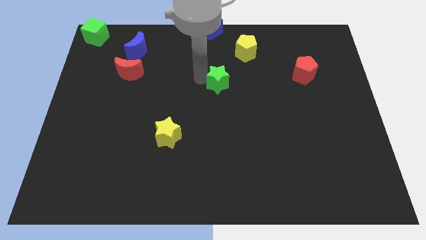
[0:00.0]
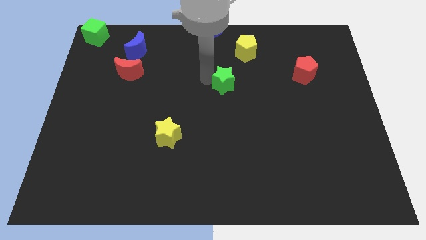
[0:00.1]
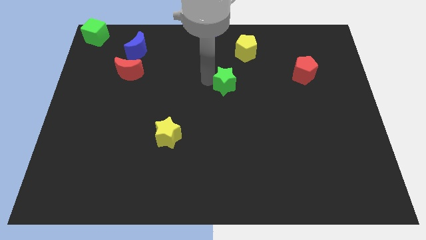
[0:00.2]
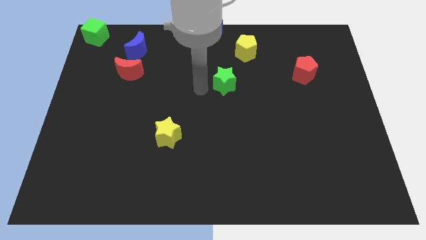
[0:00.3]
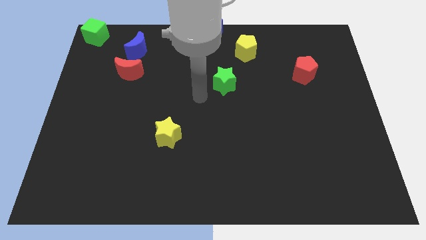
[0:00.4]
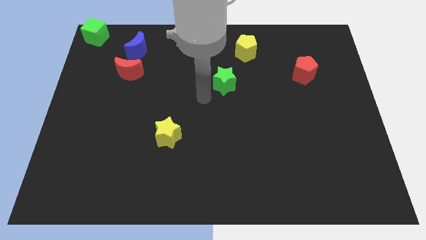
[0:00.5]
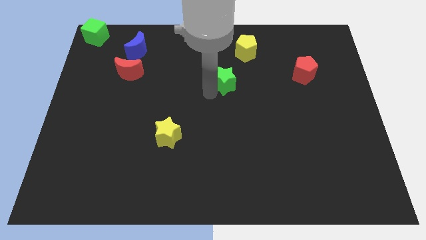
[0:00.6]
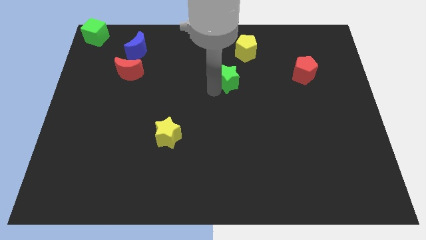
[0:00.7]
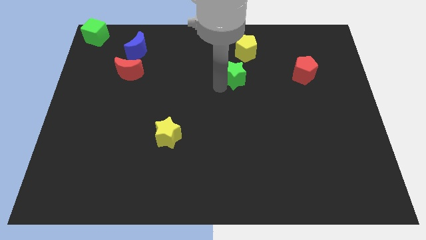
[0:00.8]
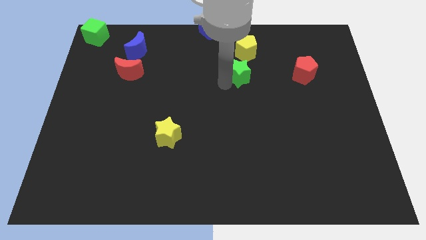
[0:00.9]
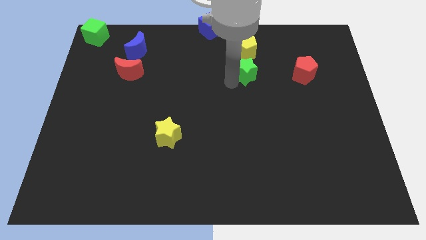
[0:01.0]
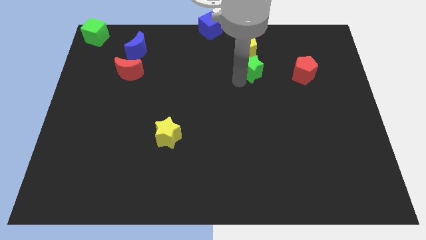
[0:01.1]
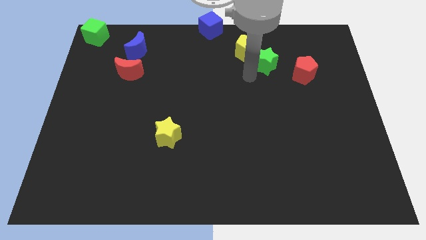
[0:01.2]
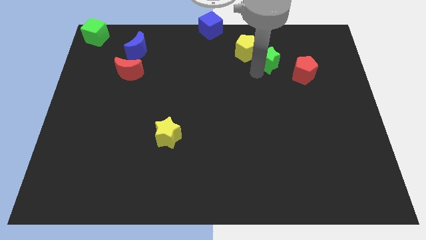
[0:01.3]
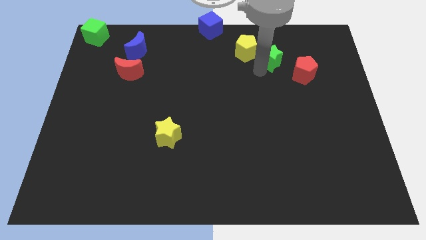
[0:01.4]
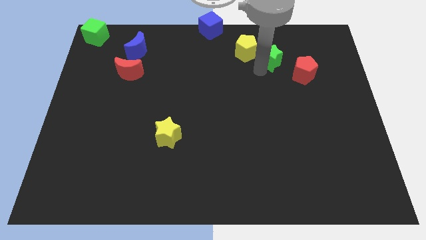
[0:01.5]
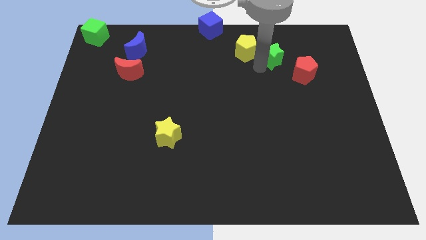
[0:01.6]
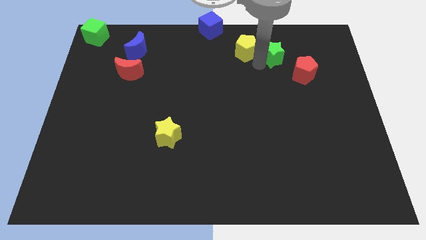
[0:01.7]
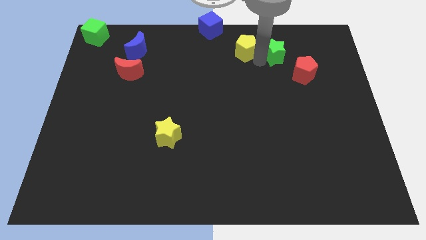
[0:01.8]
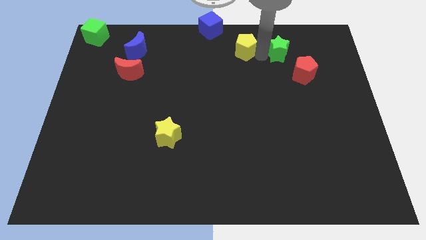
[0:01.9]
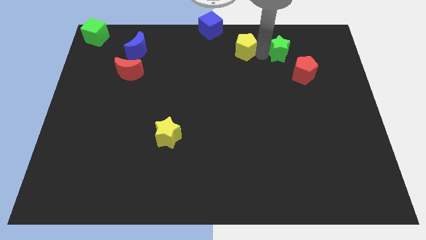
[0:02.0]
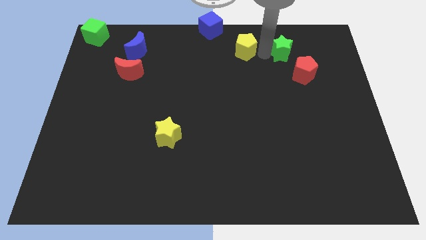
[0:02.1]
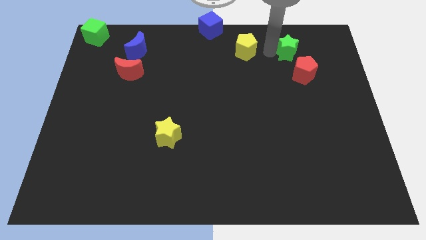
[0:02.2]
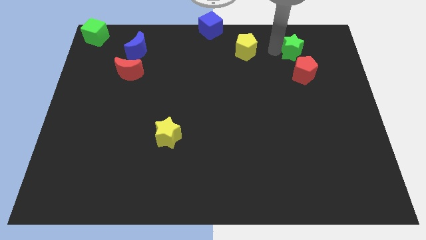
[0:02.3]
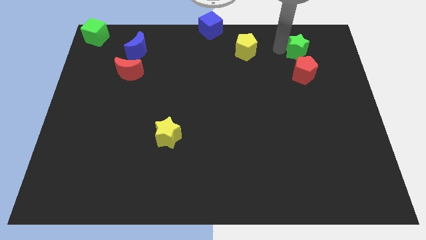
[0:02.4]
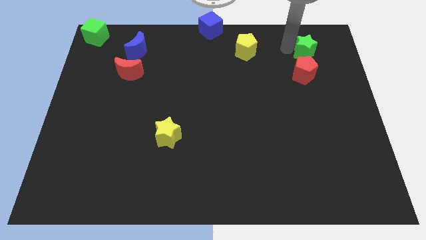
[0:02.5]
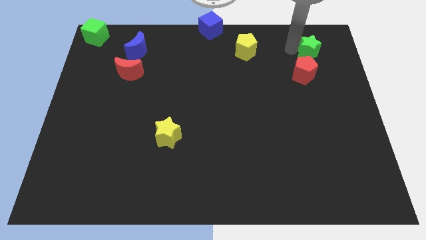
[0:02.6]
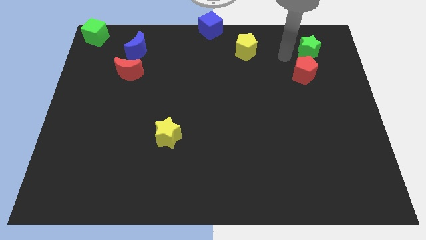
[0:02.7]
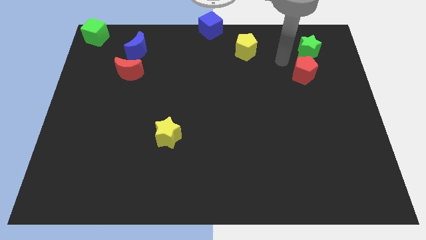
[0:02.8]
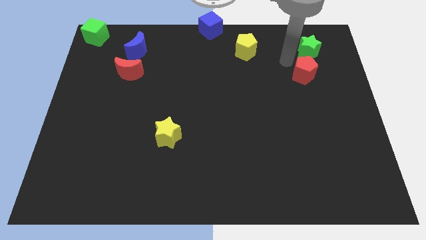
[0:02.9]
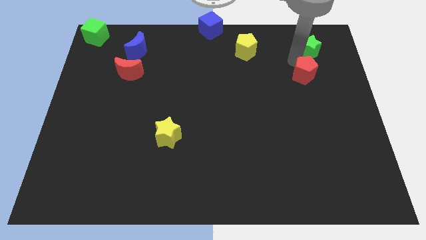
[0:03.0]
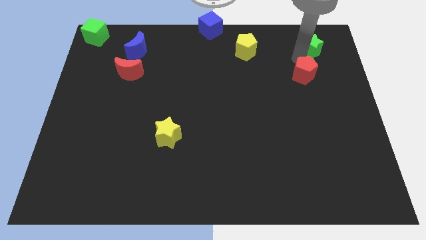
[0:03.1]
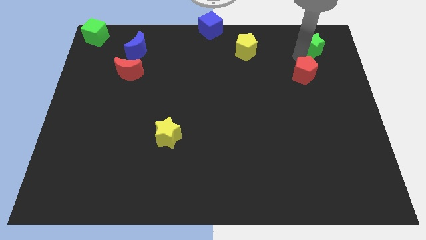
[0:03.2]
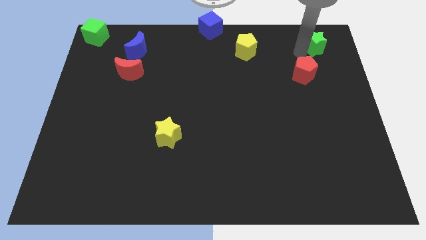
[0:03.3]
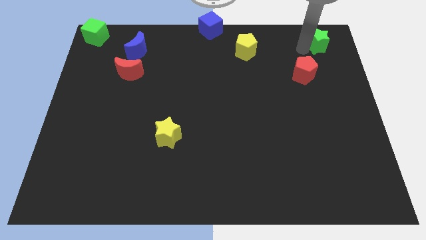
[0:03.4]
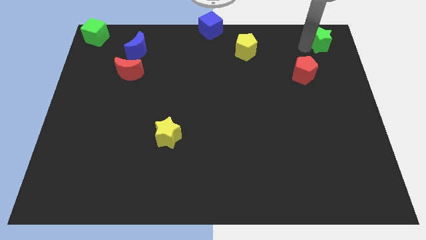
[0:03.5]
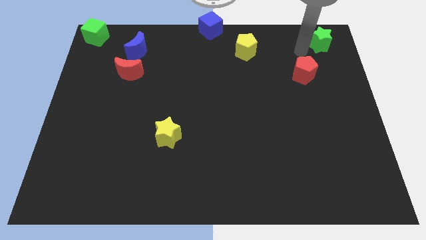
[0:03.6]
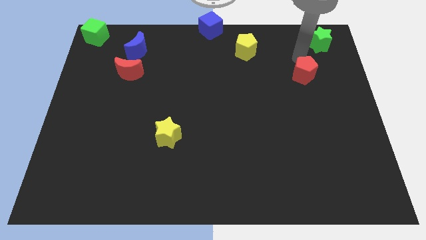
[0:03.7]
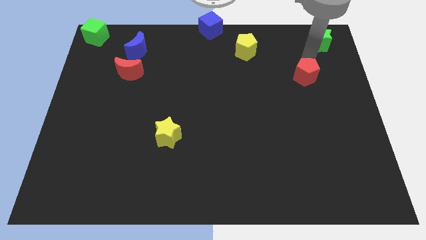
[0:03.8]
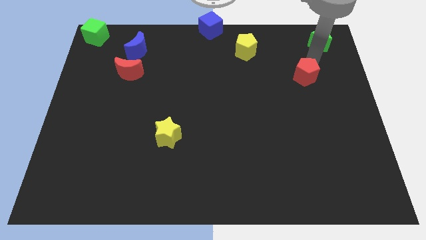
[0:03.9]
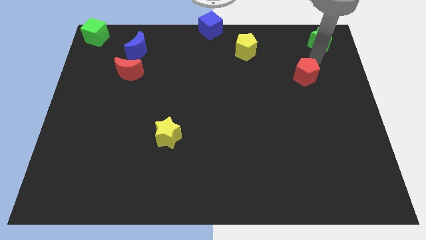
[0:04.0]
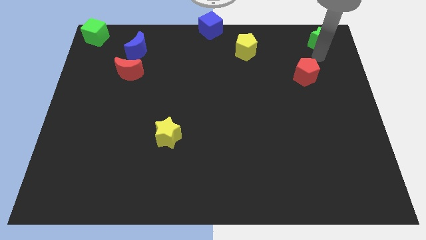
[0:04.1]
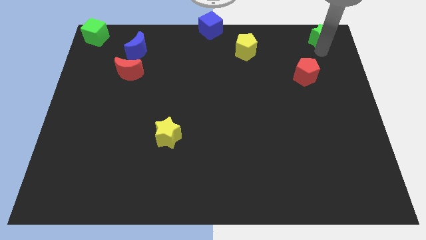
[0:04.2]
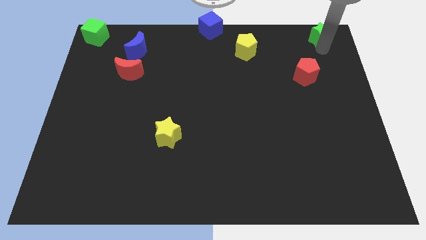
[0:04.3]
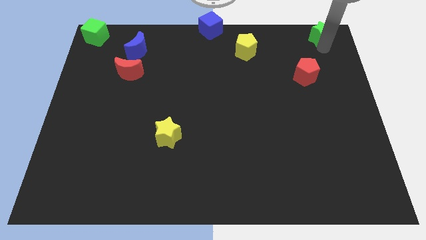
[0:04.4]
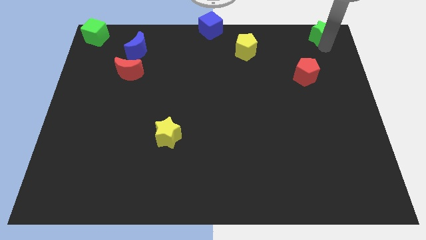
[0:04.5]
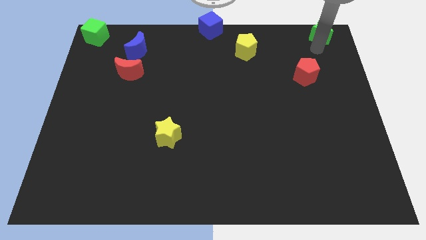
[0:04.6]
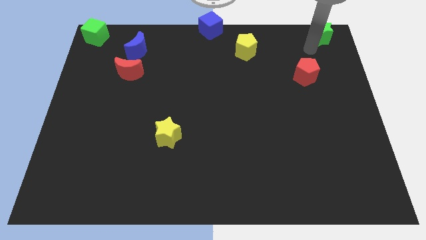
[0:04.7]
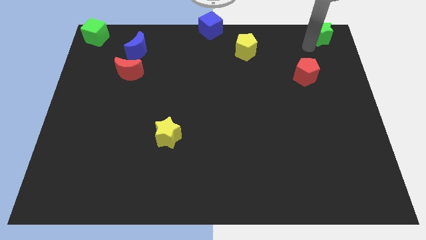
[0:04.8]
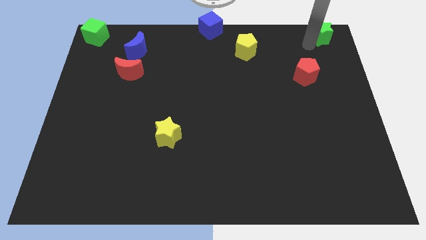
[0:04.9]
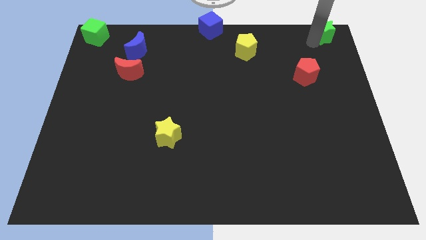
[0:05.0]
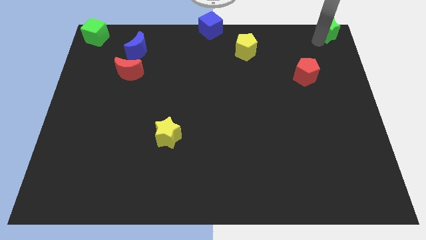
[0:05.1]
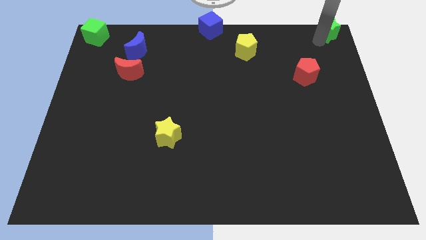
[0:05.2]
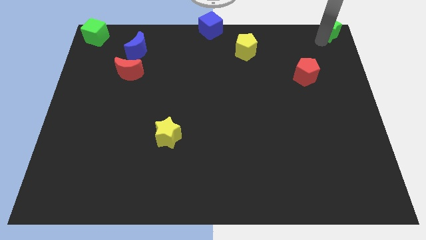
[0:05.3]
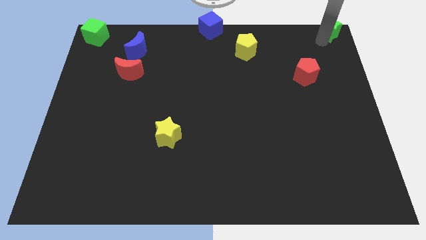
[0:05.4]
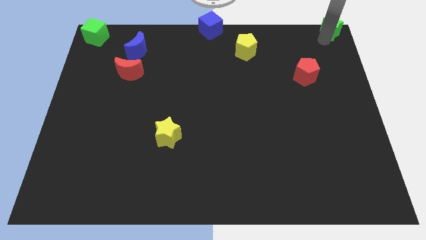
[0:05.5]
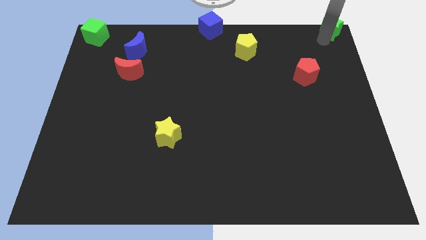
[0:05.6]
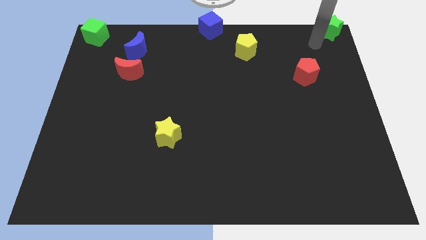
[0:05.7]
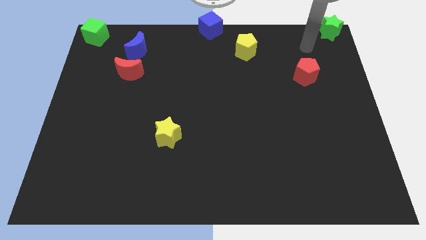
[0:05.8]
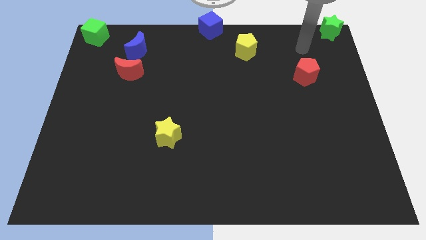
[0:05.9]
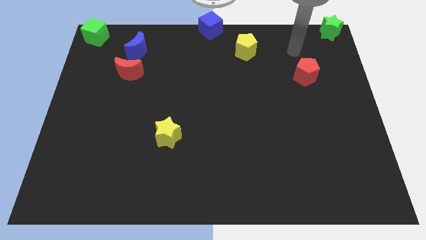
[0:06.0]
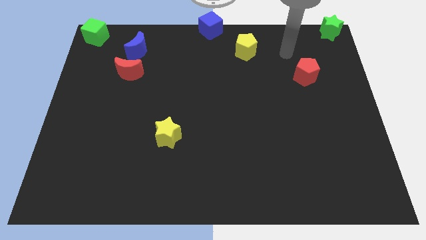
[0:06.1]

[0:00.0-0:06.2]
move green star to the top right corner of the board

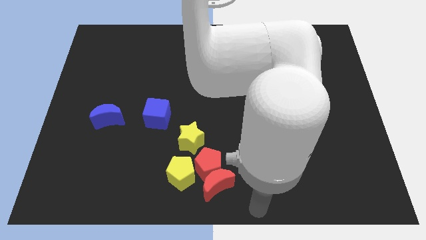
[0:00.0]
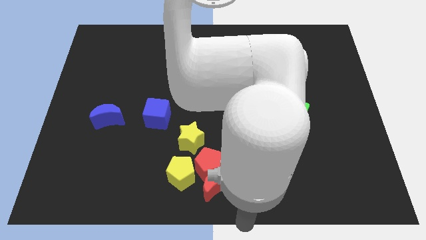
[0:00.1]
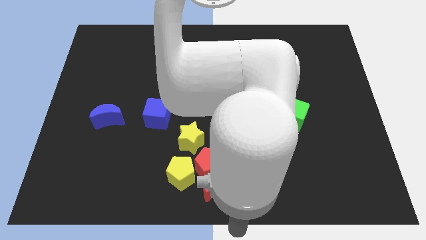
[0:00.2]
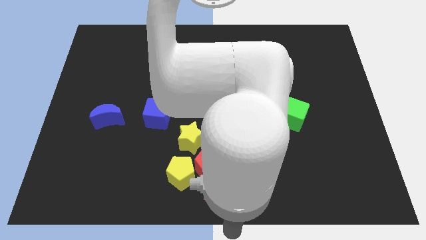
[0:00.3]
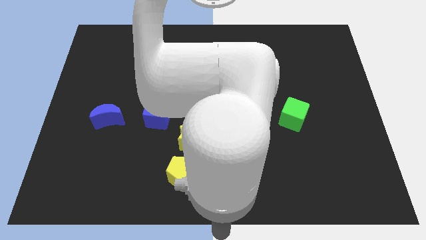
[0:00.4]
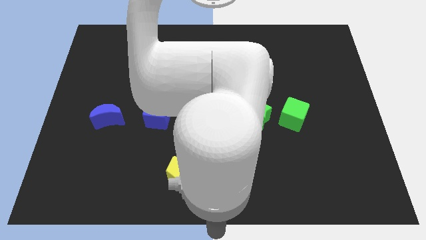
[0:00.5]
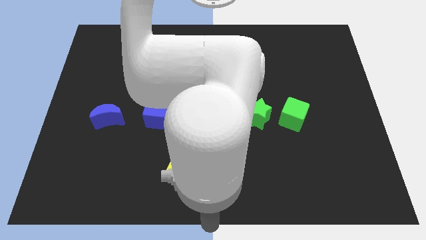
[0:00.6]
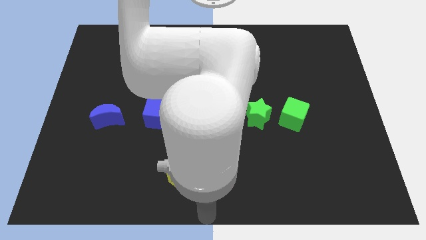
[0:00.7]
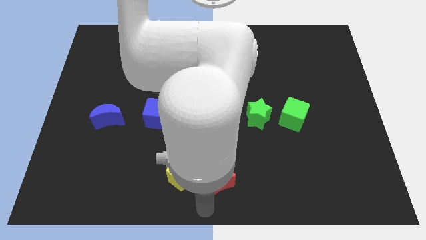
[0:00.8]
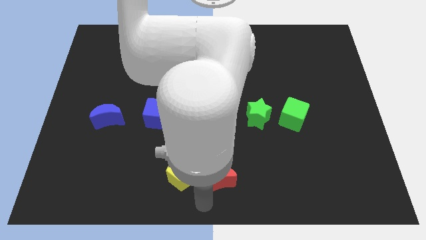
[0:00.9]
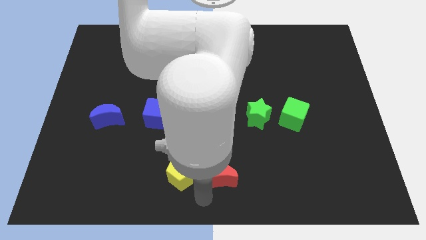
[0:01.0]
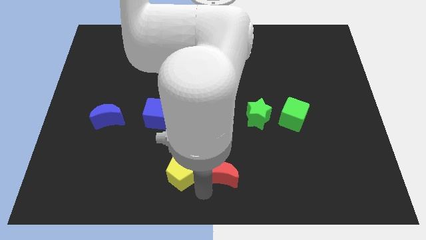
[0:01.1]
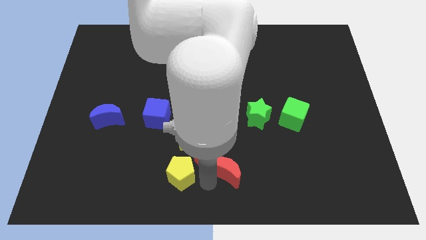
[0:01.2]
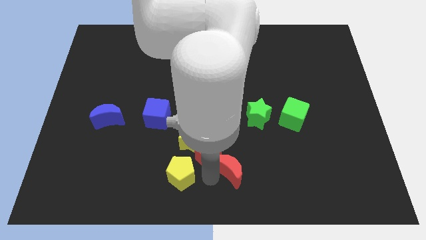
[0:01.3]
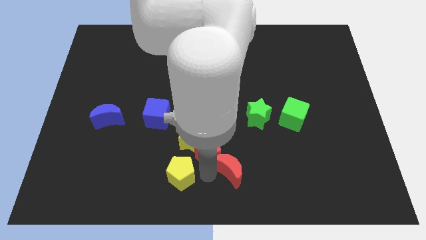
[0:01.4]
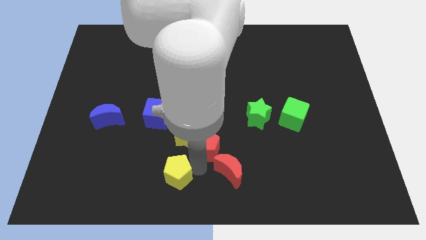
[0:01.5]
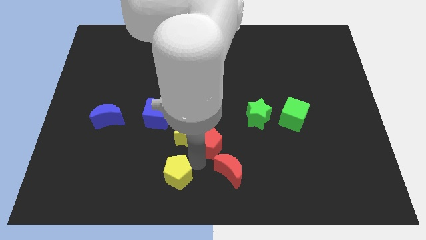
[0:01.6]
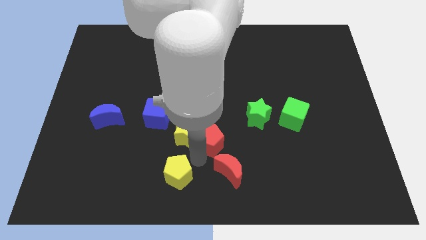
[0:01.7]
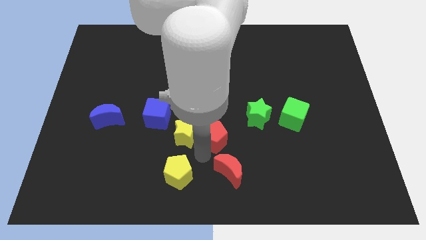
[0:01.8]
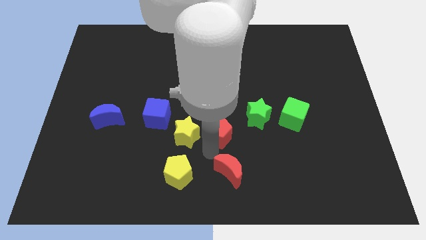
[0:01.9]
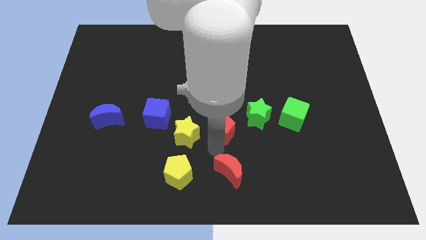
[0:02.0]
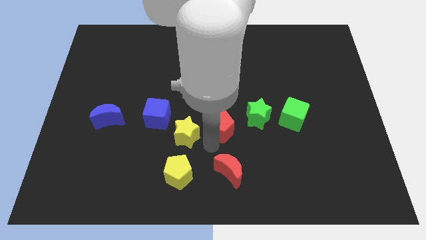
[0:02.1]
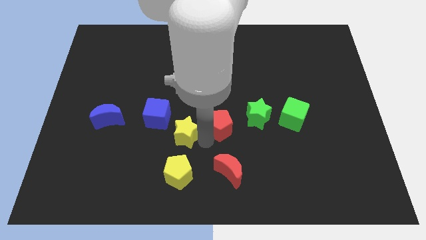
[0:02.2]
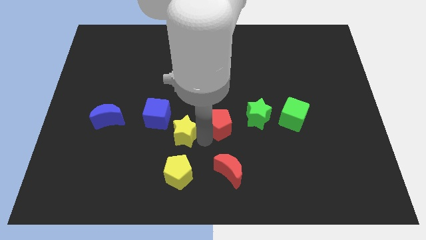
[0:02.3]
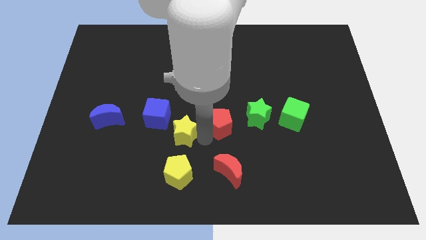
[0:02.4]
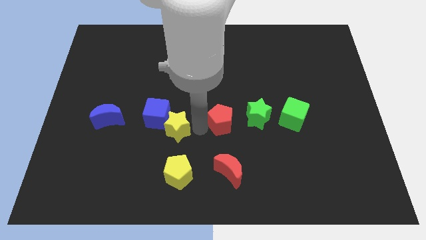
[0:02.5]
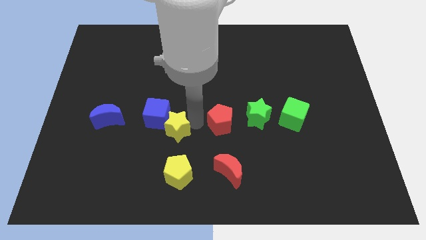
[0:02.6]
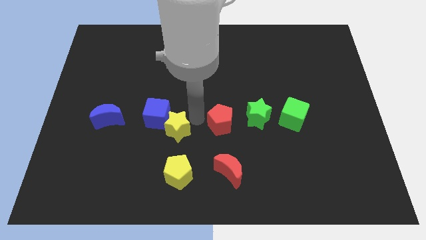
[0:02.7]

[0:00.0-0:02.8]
place the red pentagon left to the green star
